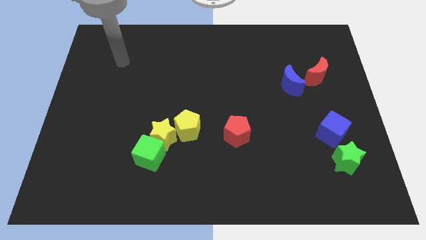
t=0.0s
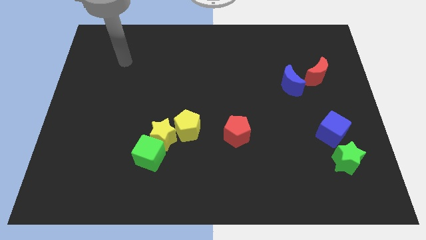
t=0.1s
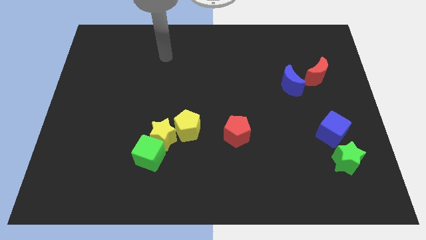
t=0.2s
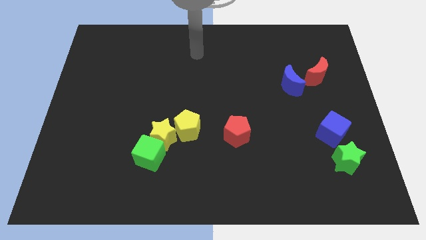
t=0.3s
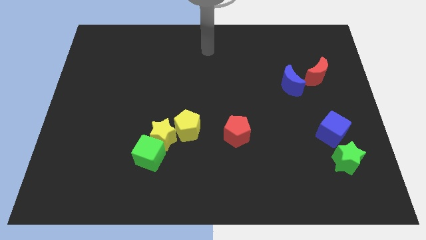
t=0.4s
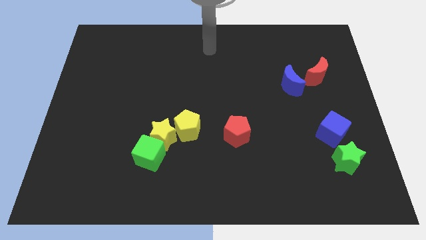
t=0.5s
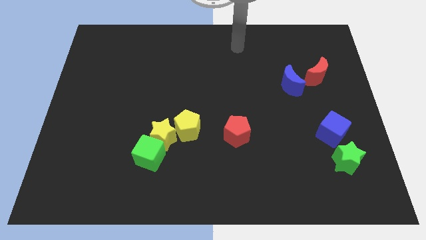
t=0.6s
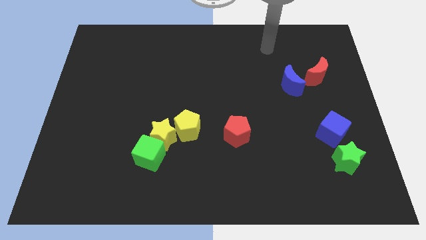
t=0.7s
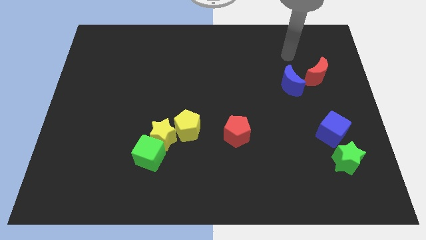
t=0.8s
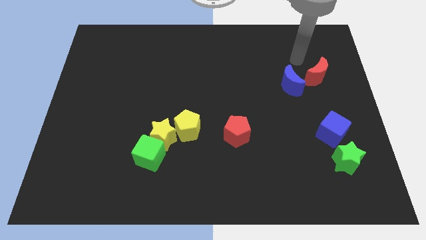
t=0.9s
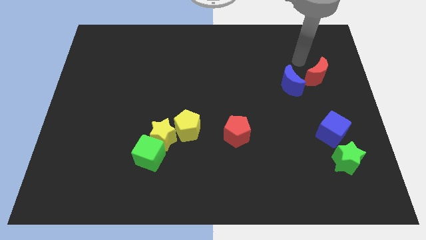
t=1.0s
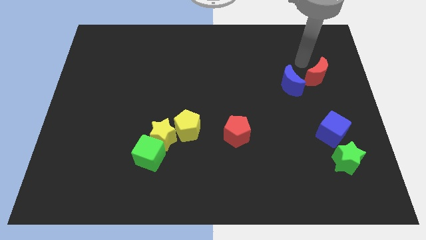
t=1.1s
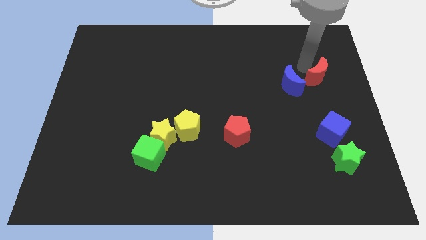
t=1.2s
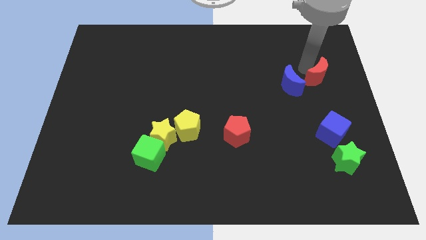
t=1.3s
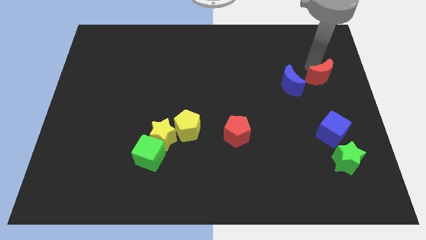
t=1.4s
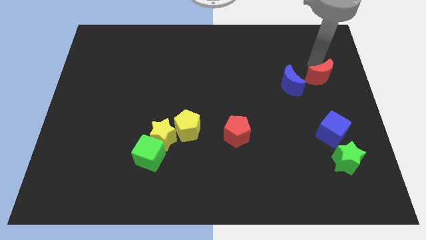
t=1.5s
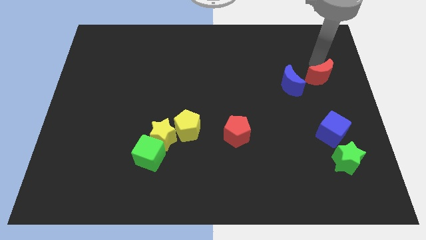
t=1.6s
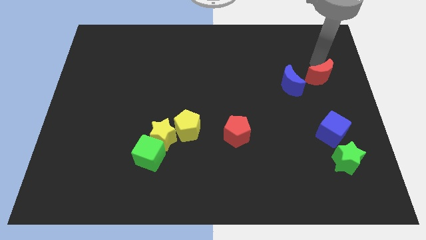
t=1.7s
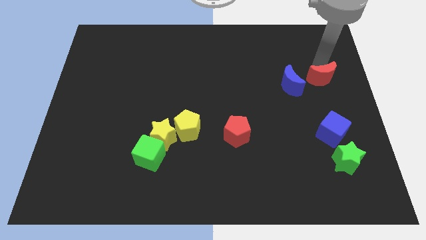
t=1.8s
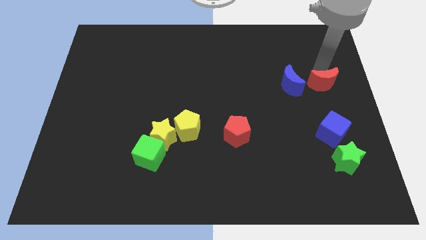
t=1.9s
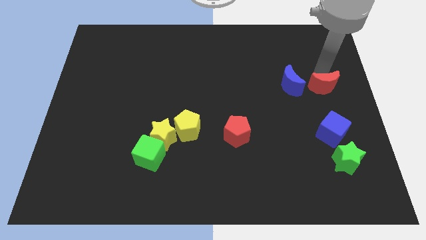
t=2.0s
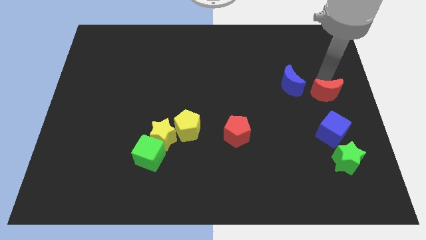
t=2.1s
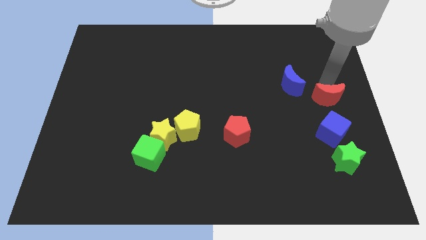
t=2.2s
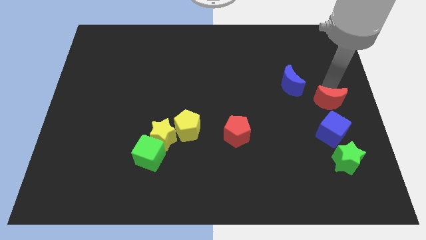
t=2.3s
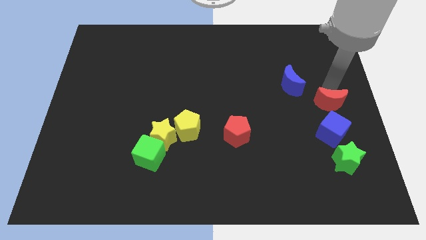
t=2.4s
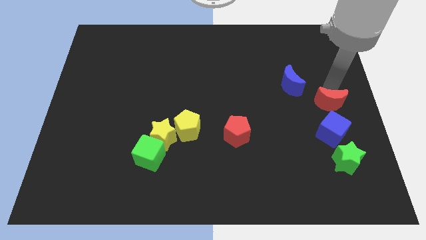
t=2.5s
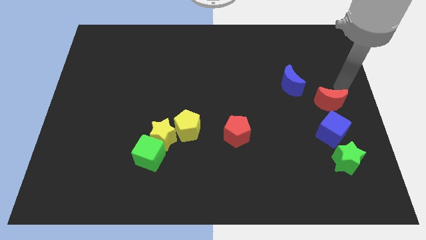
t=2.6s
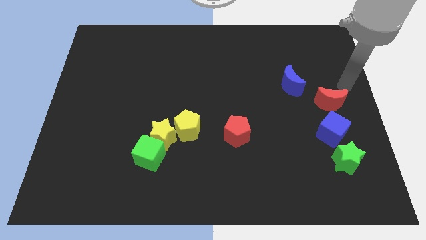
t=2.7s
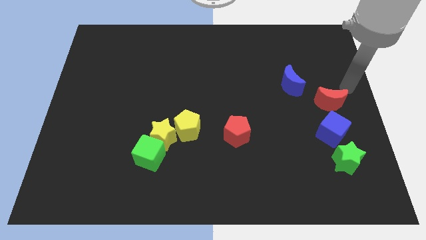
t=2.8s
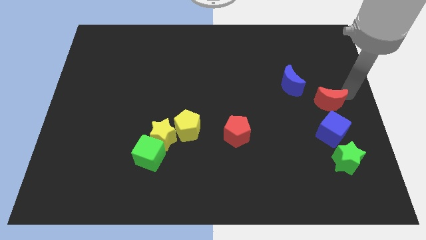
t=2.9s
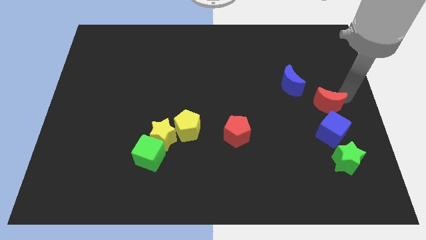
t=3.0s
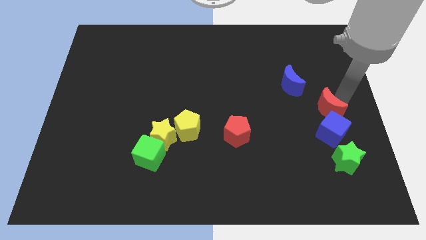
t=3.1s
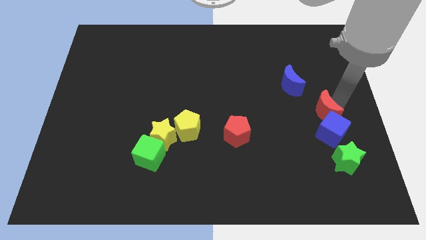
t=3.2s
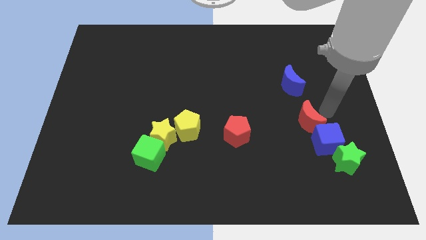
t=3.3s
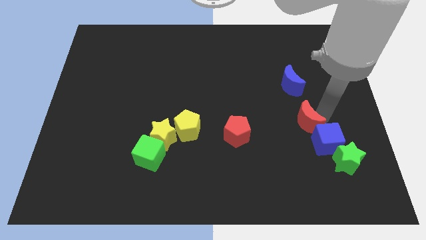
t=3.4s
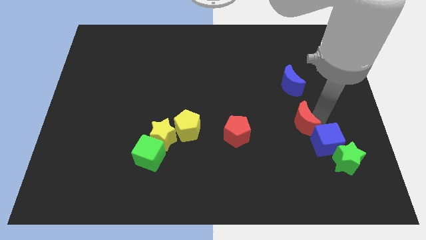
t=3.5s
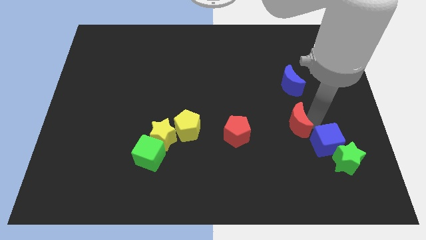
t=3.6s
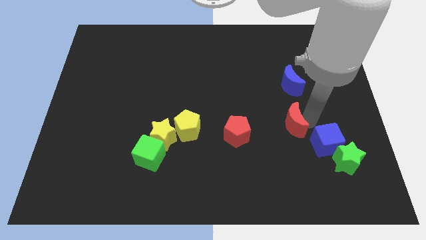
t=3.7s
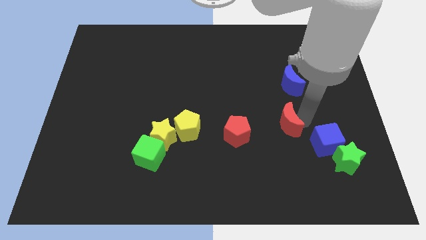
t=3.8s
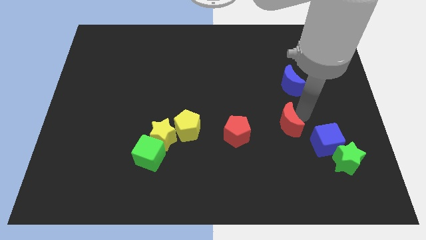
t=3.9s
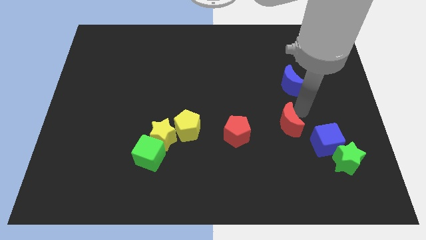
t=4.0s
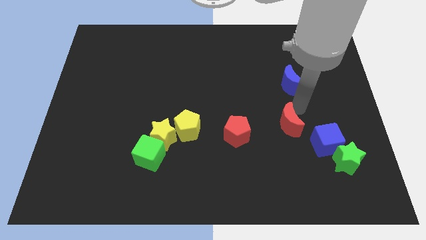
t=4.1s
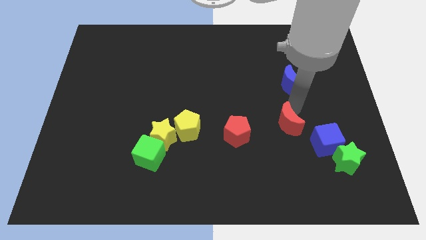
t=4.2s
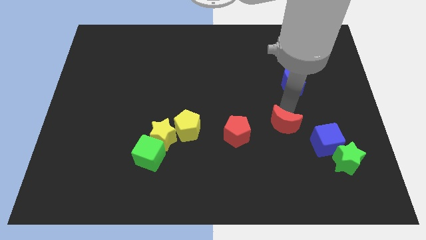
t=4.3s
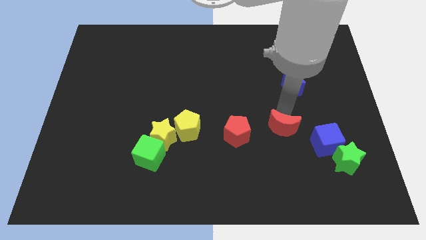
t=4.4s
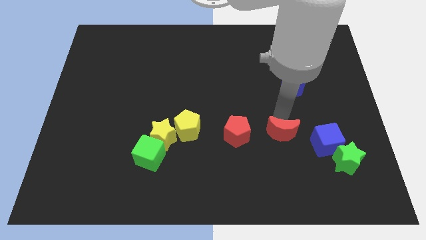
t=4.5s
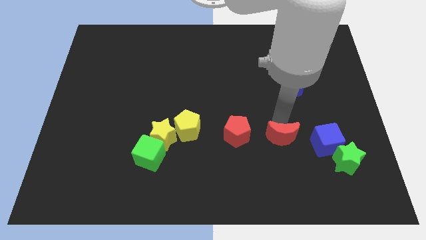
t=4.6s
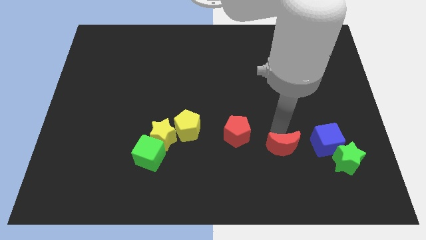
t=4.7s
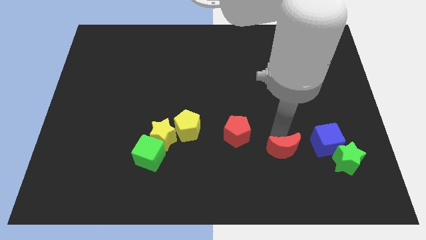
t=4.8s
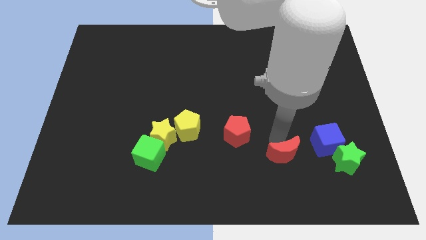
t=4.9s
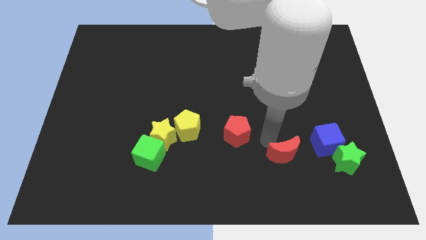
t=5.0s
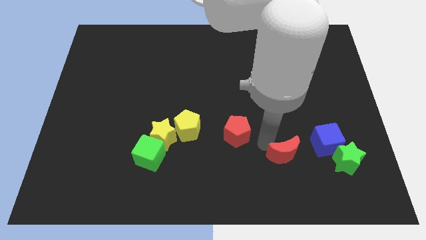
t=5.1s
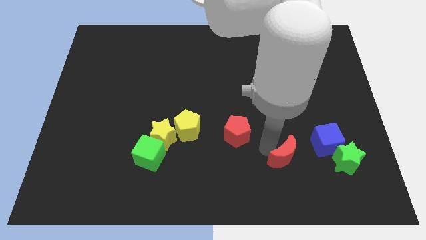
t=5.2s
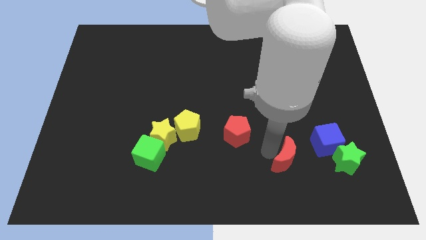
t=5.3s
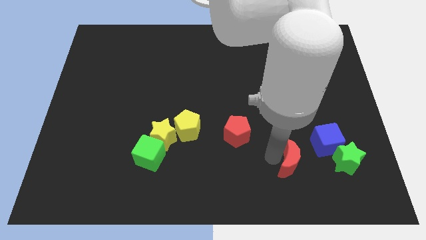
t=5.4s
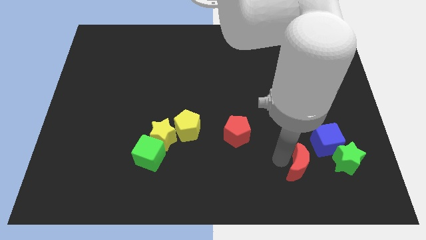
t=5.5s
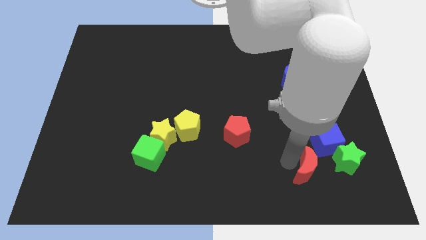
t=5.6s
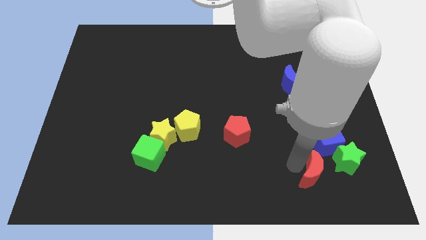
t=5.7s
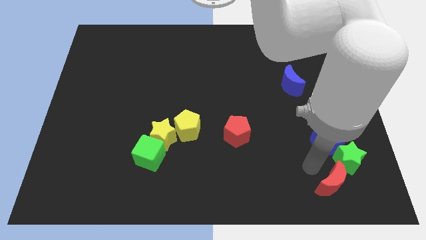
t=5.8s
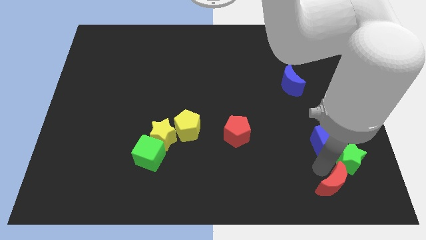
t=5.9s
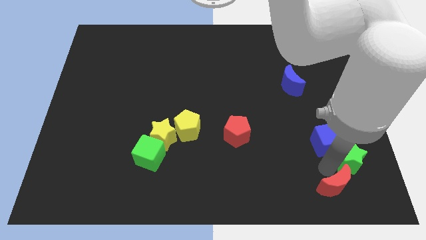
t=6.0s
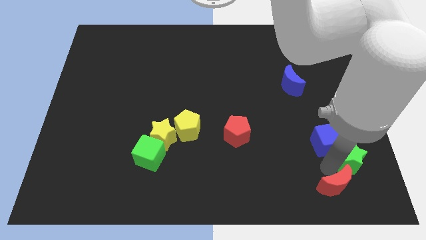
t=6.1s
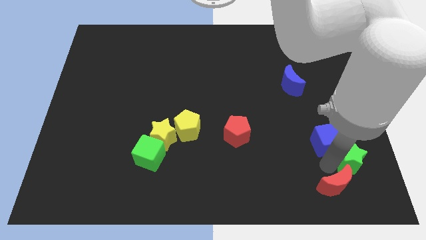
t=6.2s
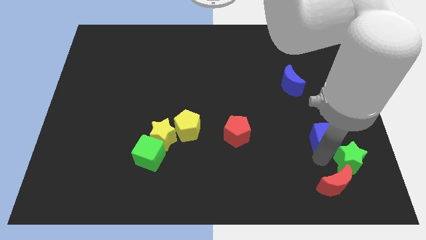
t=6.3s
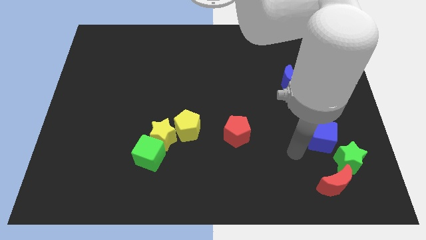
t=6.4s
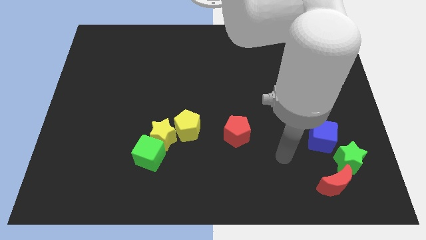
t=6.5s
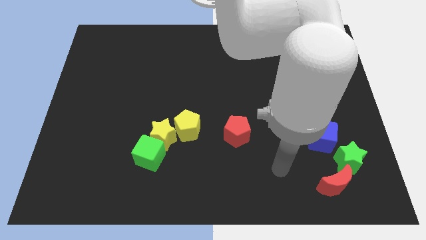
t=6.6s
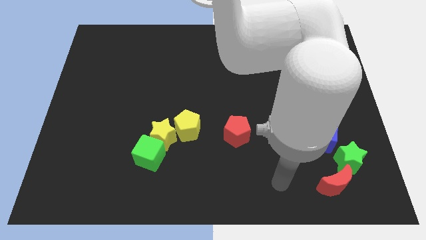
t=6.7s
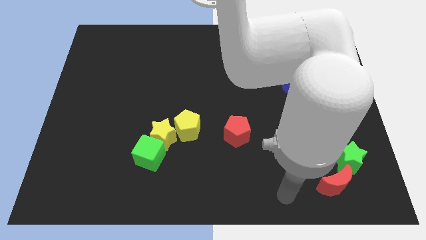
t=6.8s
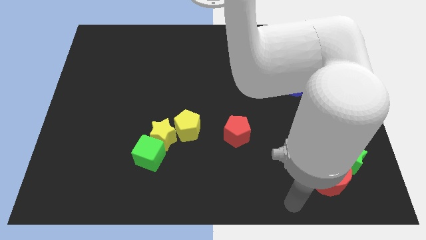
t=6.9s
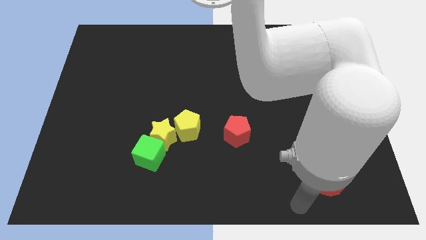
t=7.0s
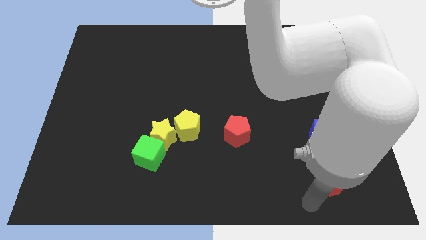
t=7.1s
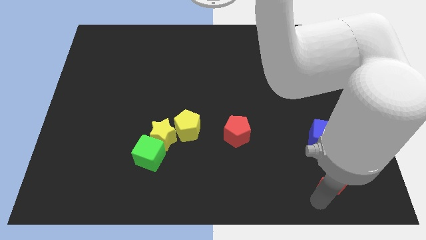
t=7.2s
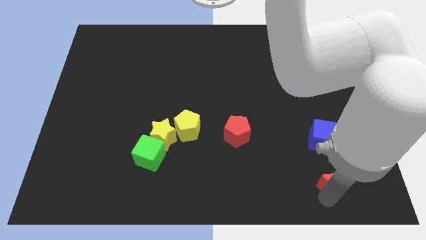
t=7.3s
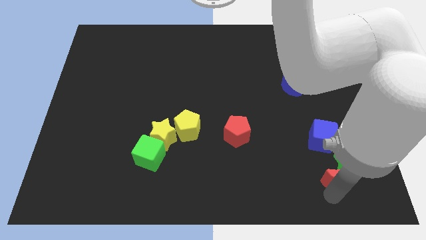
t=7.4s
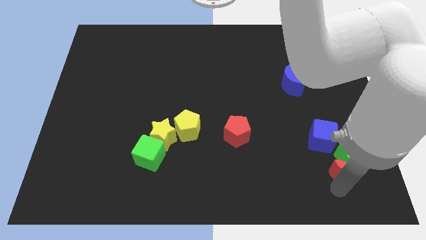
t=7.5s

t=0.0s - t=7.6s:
put the red moon towards the green star

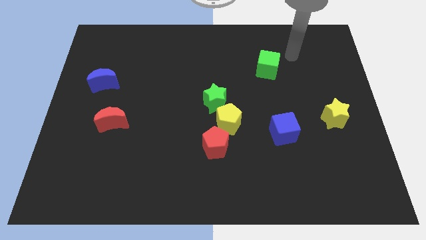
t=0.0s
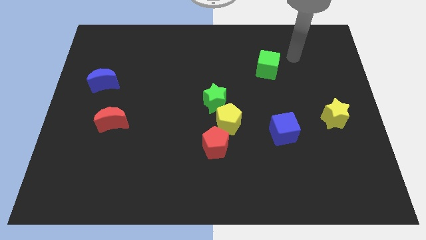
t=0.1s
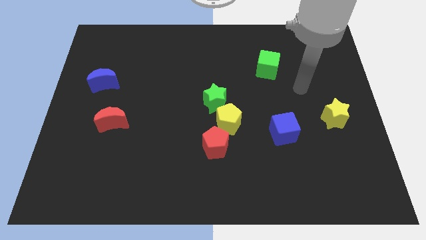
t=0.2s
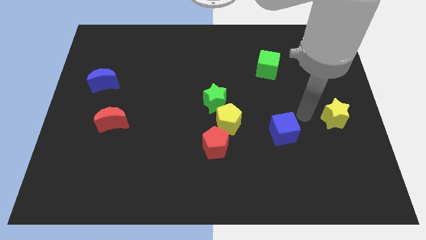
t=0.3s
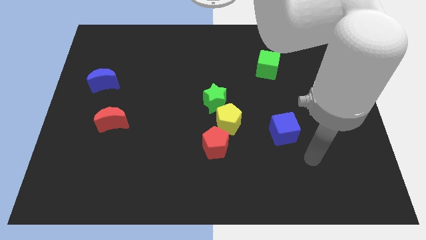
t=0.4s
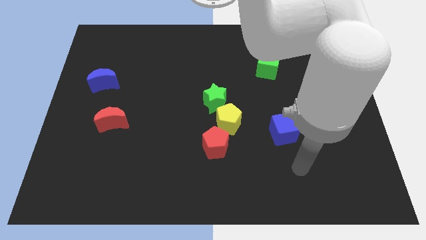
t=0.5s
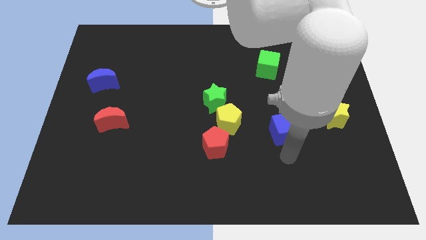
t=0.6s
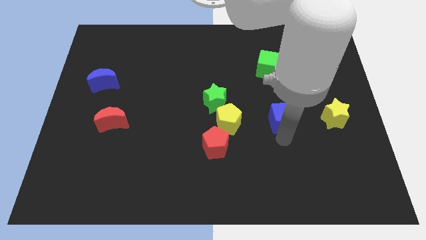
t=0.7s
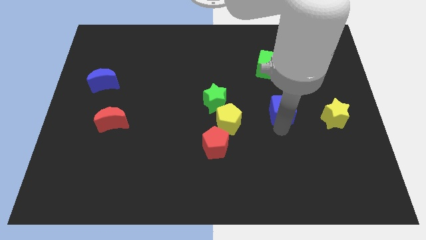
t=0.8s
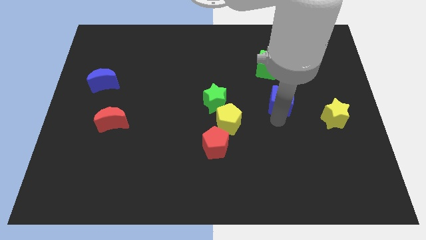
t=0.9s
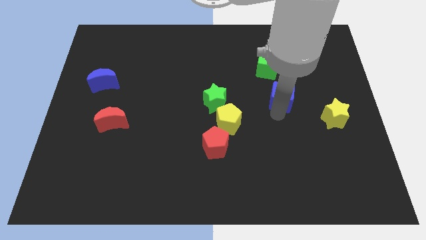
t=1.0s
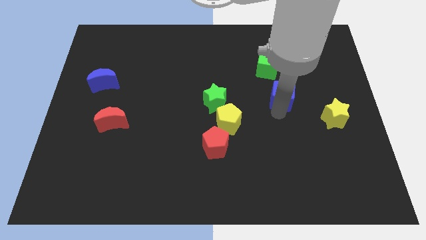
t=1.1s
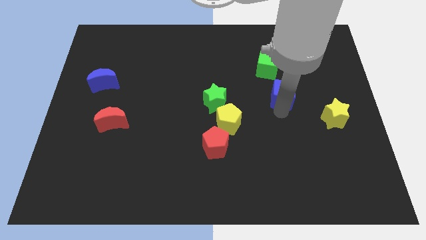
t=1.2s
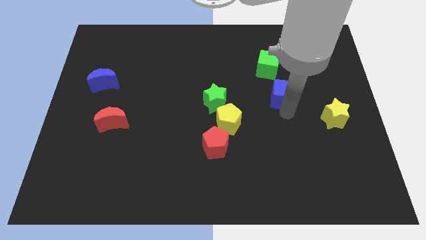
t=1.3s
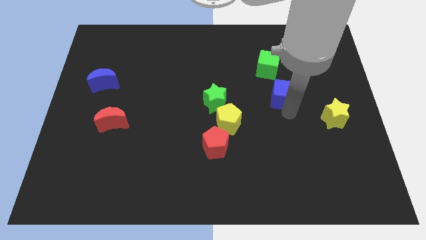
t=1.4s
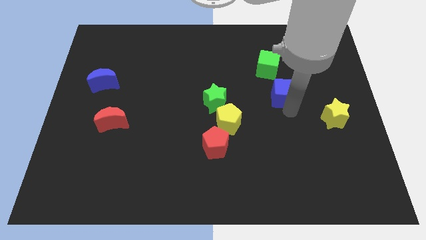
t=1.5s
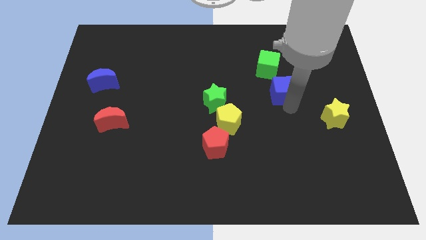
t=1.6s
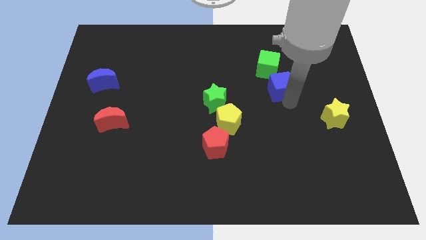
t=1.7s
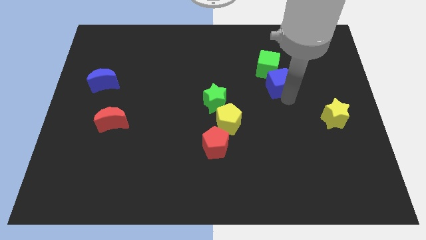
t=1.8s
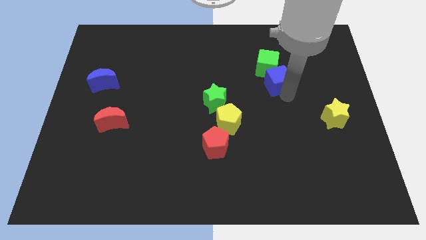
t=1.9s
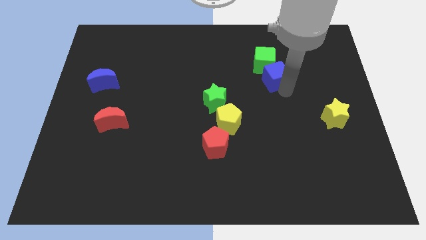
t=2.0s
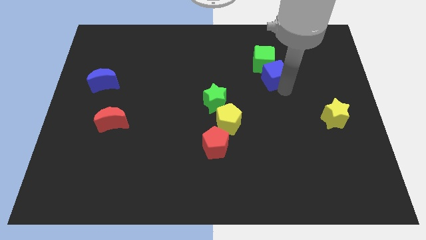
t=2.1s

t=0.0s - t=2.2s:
push the blue cube towards the green cube
